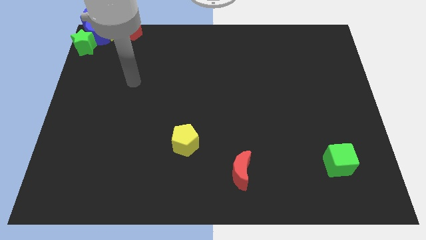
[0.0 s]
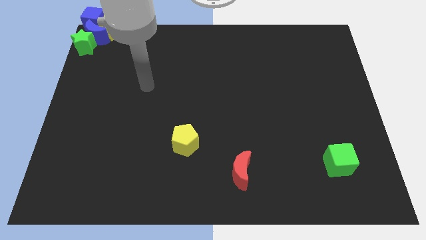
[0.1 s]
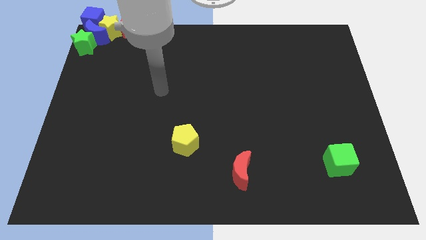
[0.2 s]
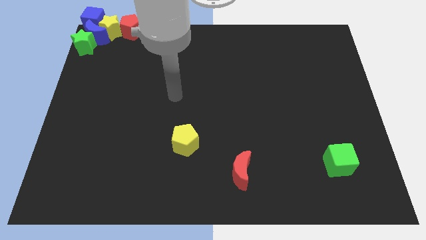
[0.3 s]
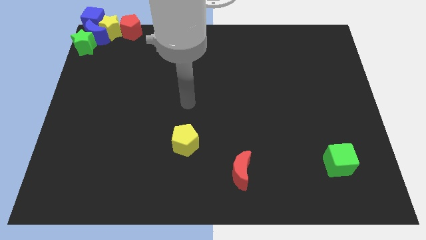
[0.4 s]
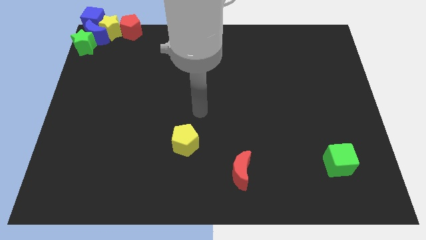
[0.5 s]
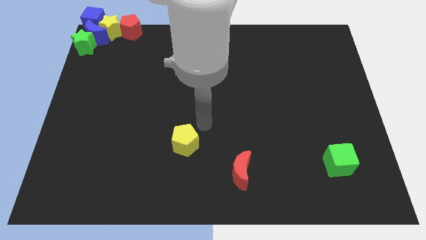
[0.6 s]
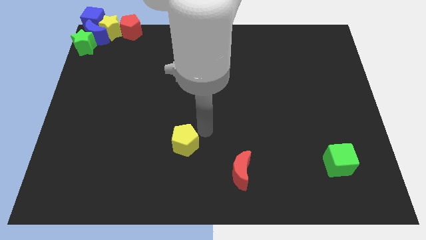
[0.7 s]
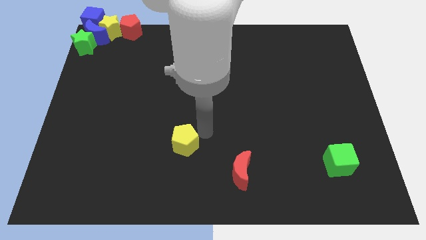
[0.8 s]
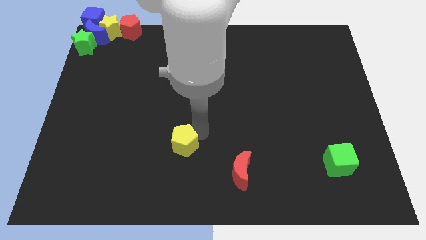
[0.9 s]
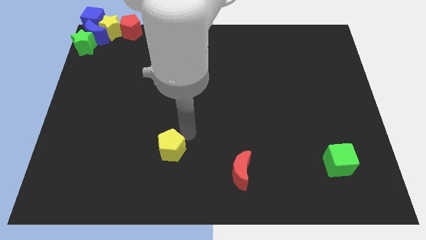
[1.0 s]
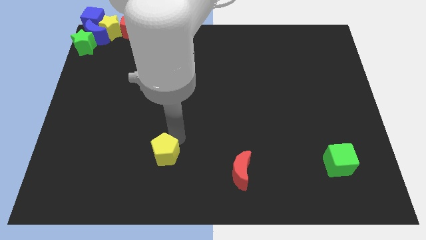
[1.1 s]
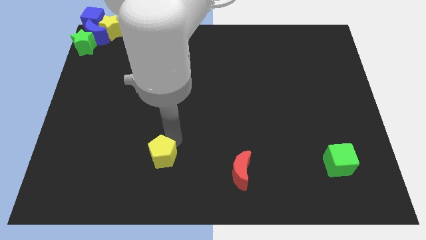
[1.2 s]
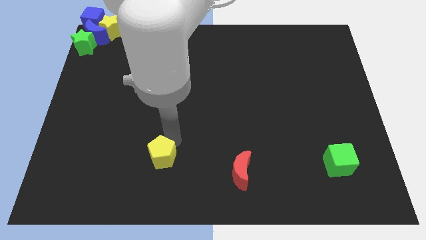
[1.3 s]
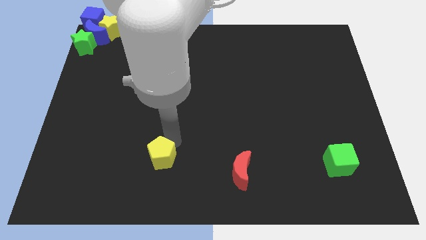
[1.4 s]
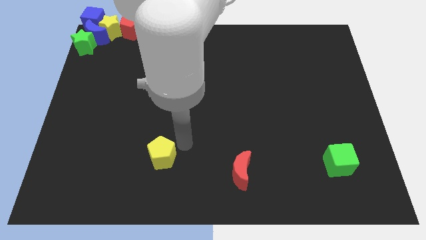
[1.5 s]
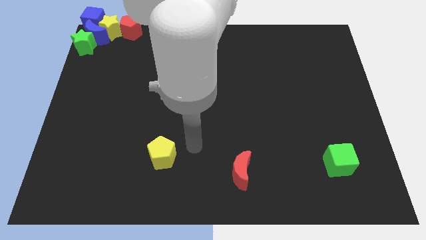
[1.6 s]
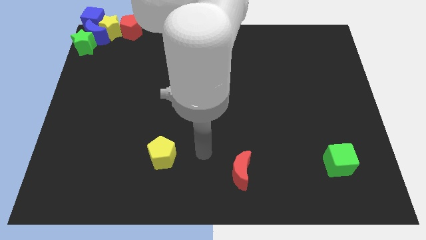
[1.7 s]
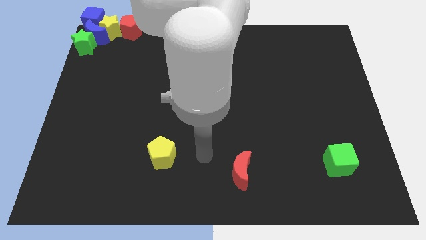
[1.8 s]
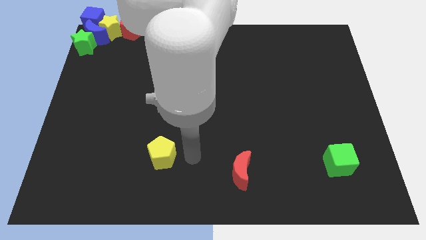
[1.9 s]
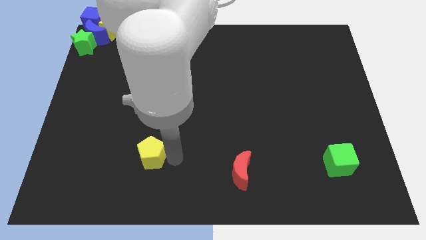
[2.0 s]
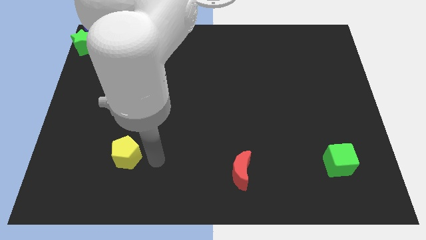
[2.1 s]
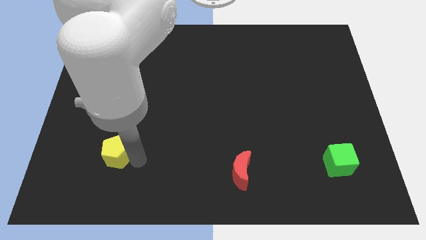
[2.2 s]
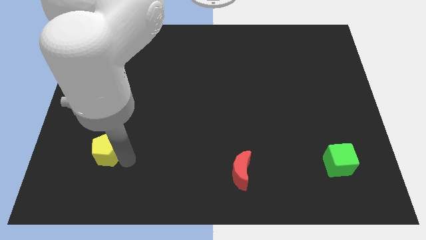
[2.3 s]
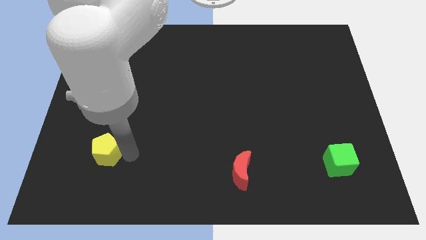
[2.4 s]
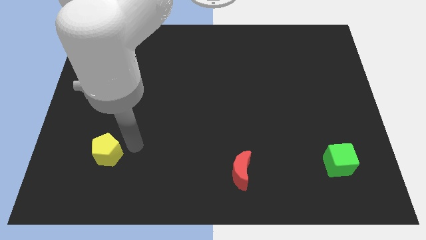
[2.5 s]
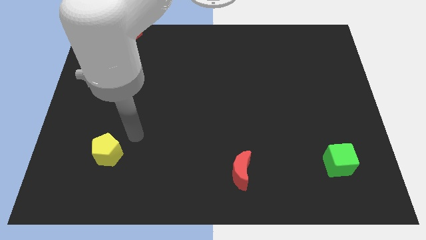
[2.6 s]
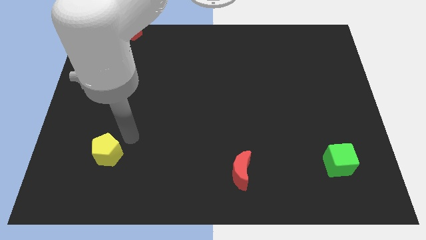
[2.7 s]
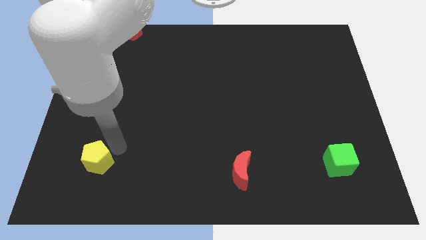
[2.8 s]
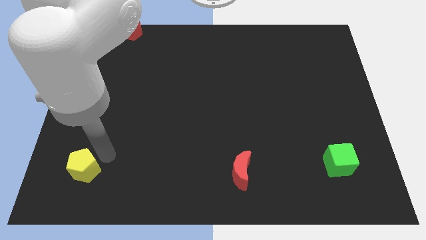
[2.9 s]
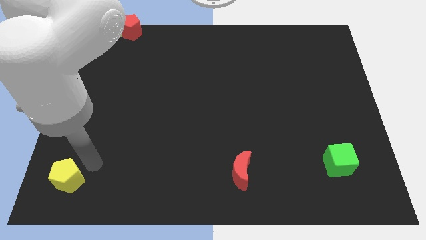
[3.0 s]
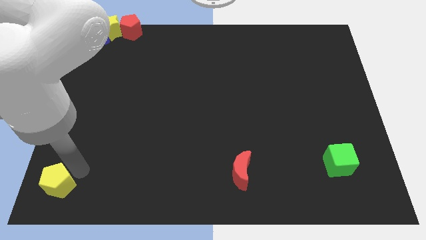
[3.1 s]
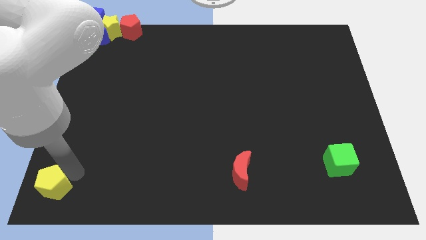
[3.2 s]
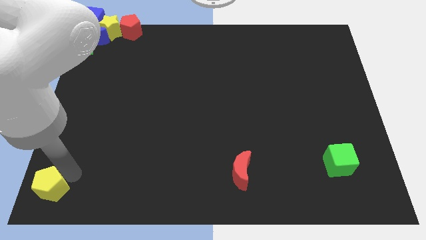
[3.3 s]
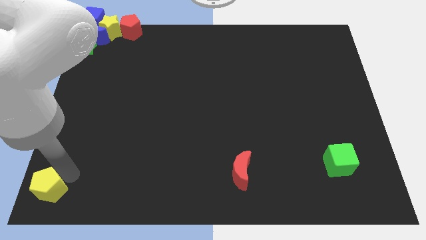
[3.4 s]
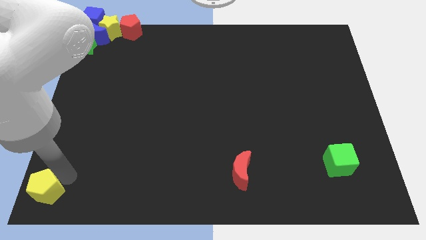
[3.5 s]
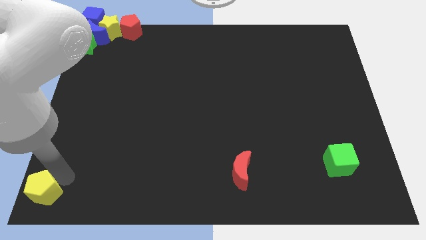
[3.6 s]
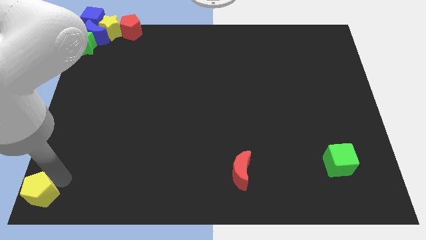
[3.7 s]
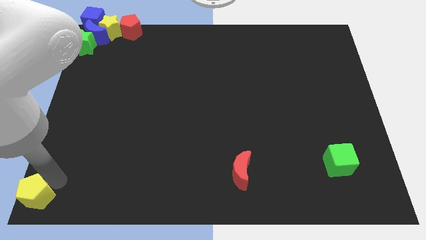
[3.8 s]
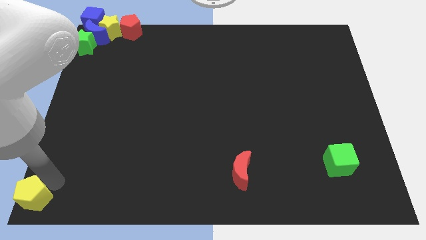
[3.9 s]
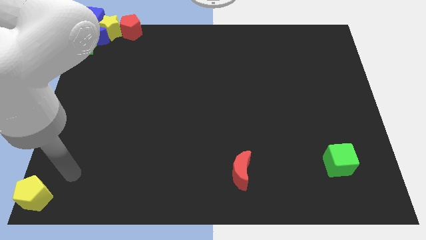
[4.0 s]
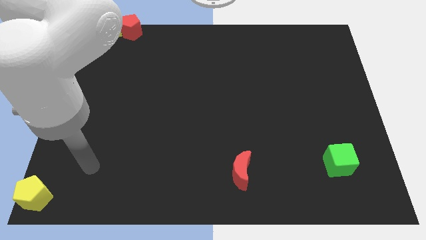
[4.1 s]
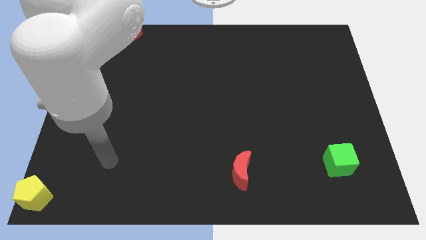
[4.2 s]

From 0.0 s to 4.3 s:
move the yellow pentagon to the bottom left corner

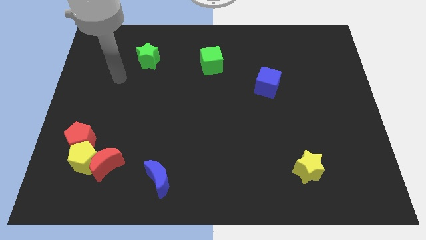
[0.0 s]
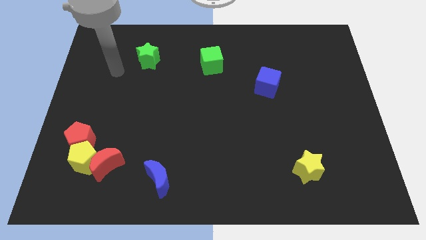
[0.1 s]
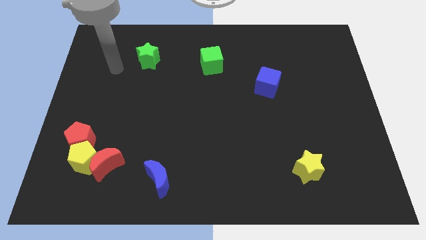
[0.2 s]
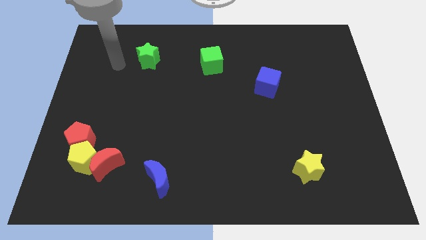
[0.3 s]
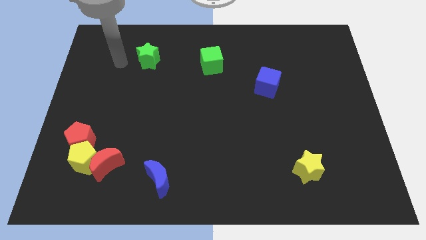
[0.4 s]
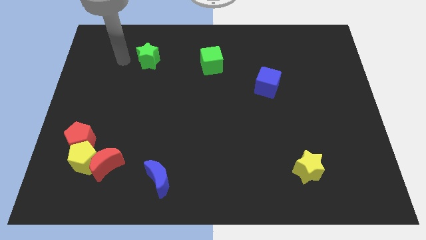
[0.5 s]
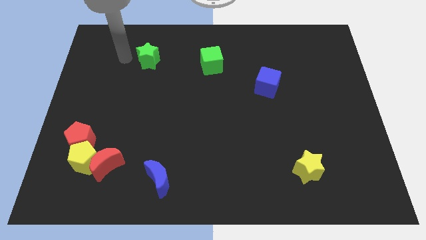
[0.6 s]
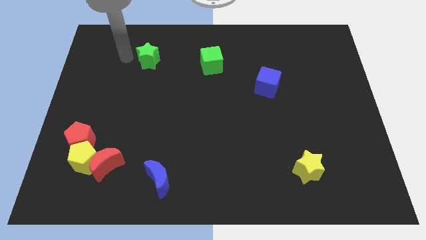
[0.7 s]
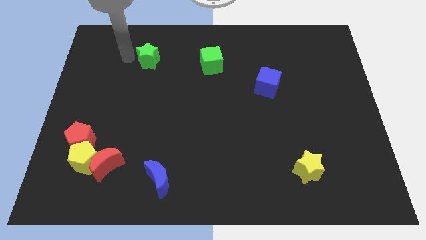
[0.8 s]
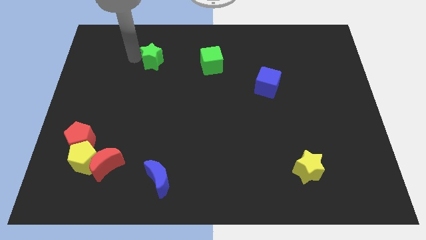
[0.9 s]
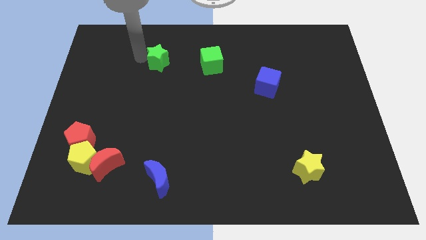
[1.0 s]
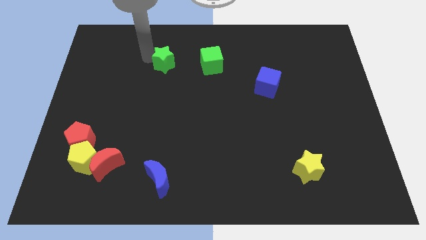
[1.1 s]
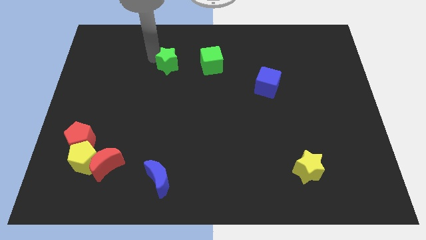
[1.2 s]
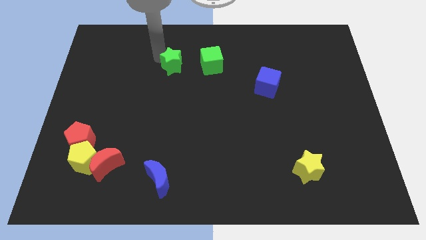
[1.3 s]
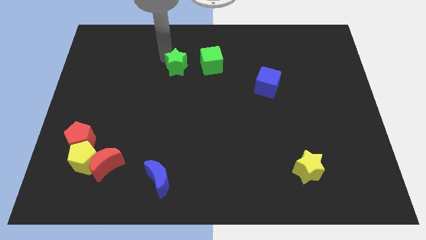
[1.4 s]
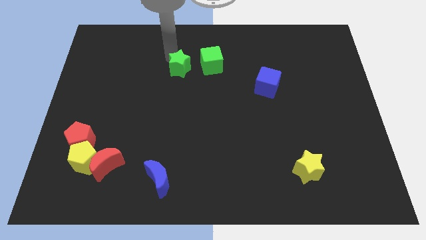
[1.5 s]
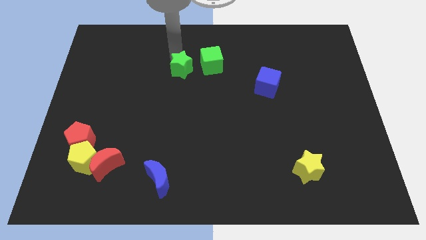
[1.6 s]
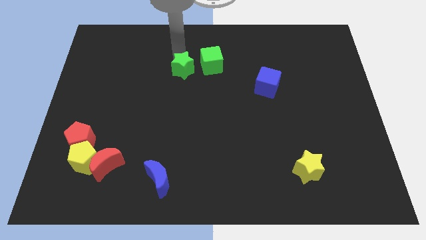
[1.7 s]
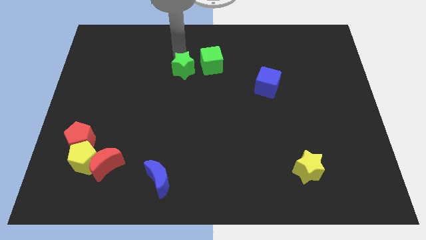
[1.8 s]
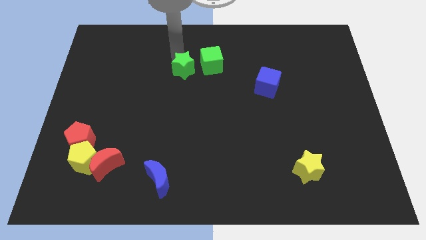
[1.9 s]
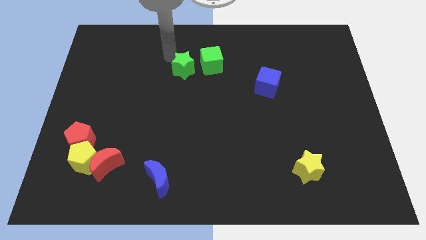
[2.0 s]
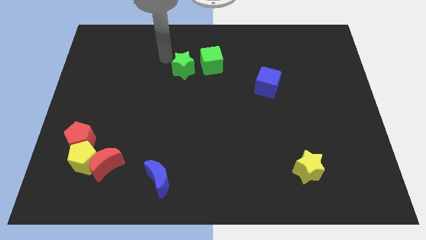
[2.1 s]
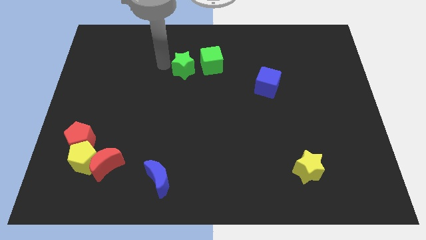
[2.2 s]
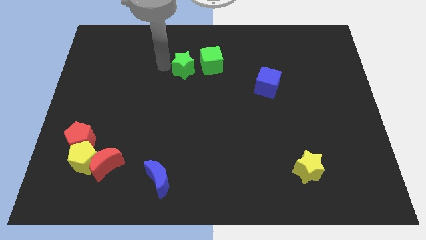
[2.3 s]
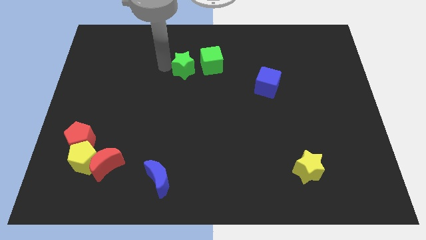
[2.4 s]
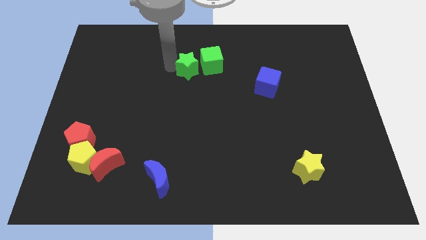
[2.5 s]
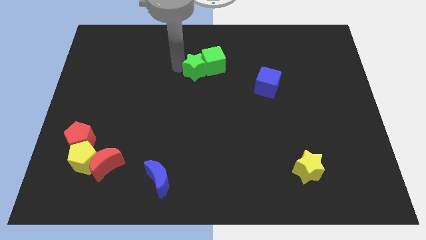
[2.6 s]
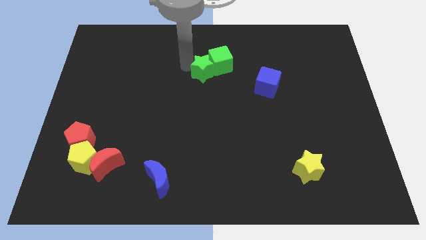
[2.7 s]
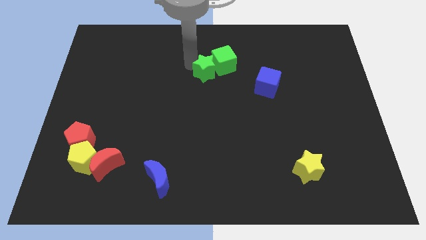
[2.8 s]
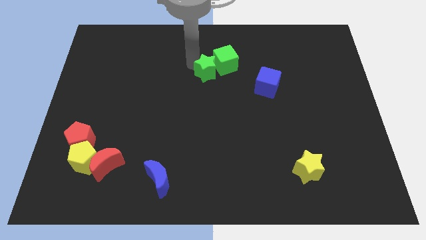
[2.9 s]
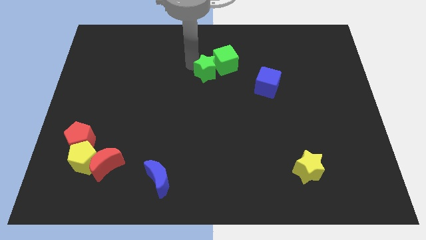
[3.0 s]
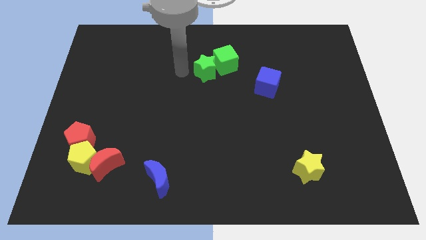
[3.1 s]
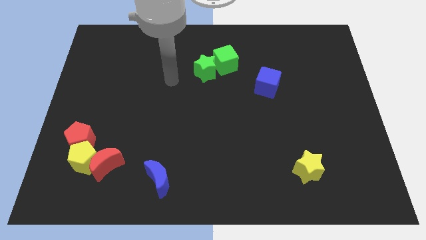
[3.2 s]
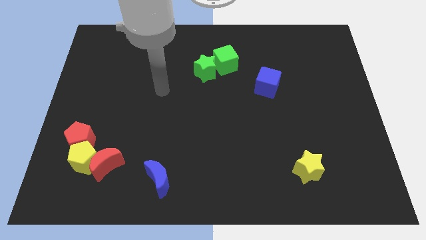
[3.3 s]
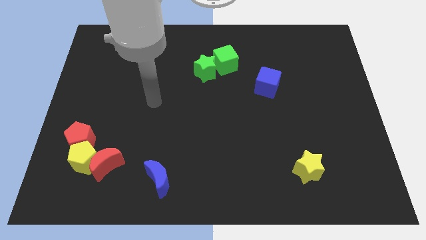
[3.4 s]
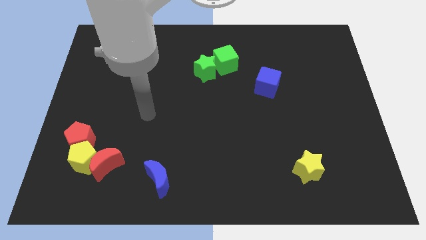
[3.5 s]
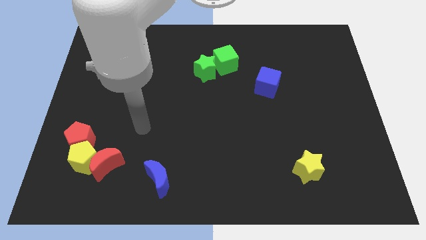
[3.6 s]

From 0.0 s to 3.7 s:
move the green star into the green cube

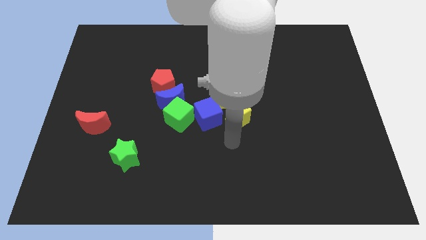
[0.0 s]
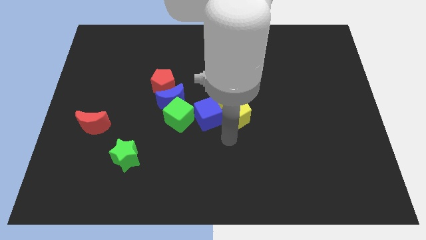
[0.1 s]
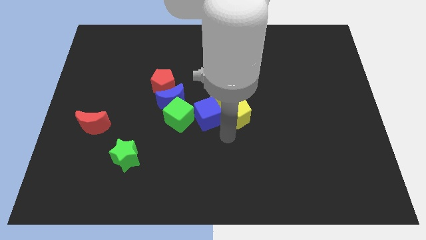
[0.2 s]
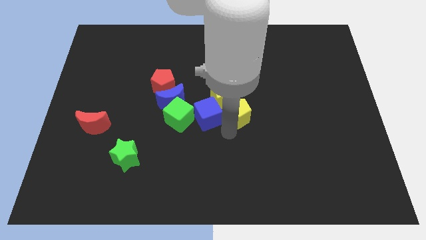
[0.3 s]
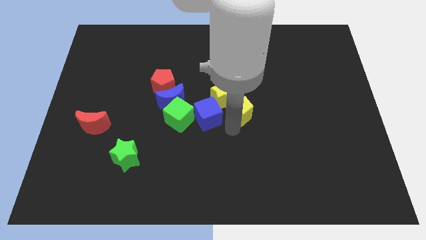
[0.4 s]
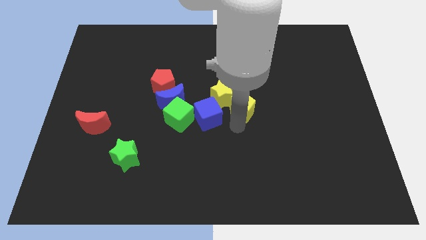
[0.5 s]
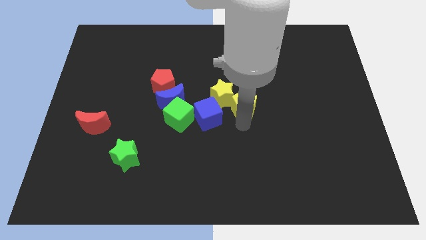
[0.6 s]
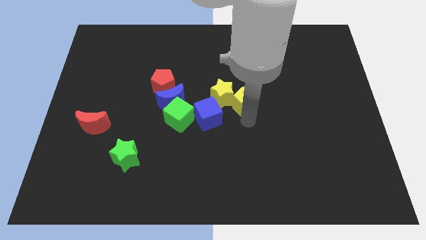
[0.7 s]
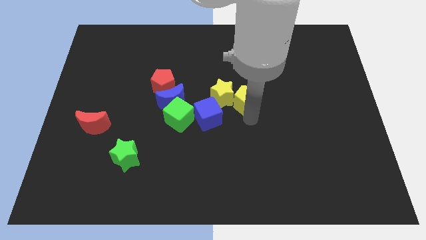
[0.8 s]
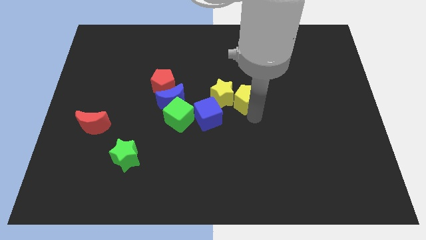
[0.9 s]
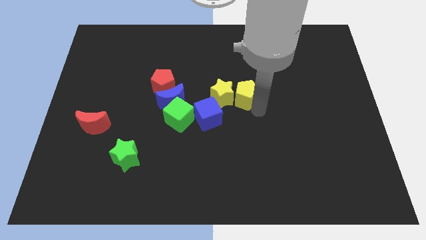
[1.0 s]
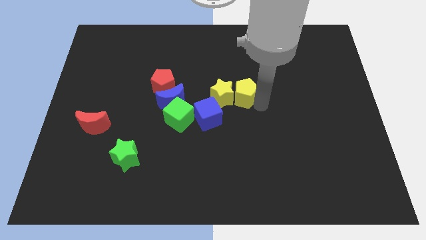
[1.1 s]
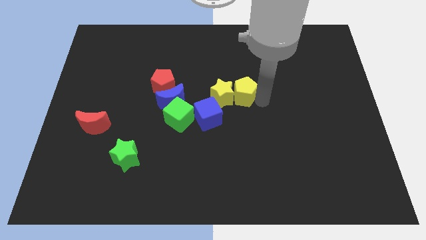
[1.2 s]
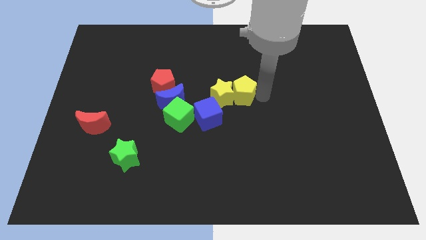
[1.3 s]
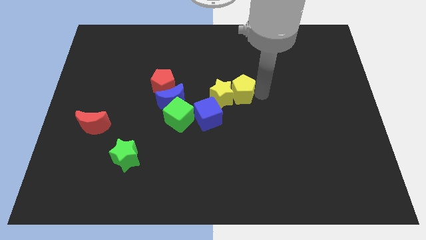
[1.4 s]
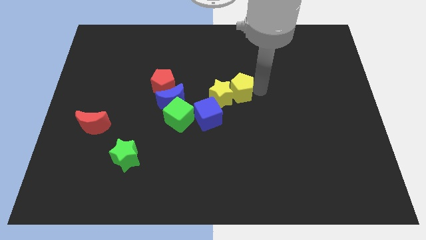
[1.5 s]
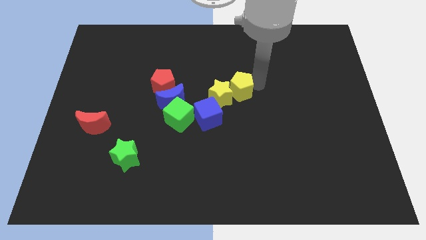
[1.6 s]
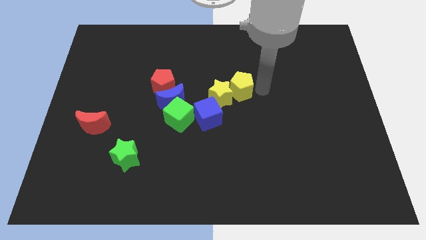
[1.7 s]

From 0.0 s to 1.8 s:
drag the yellow pentagon right of the yellow star
